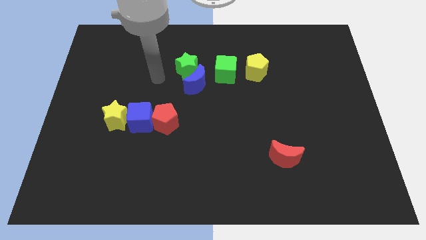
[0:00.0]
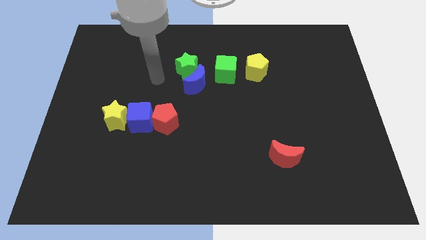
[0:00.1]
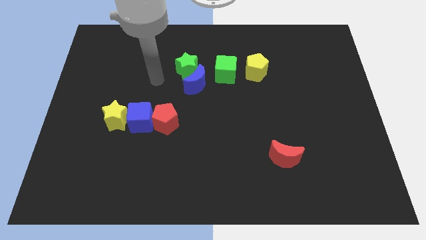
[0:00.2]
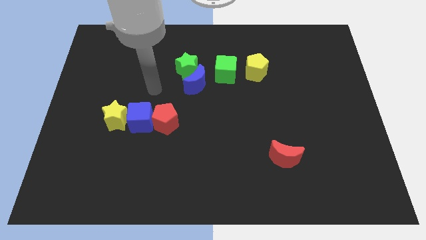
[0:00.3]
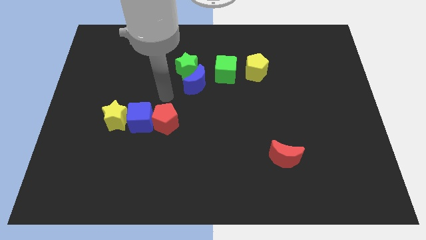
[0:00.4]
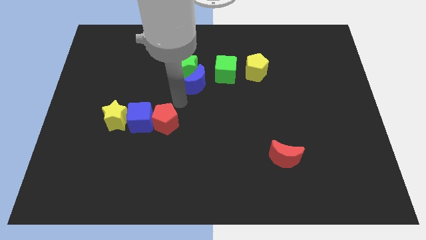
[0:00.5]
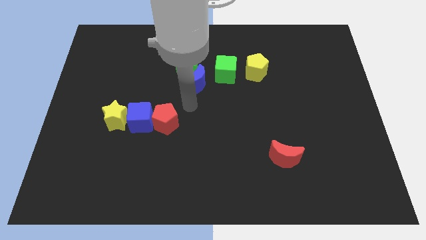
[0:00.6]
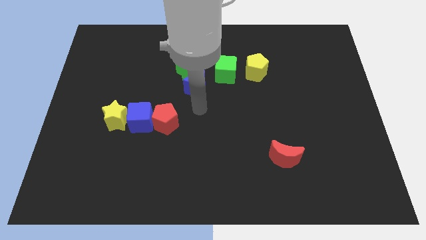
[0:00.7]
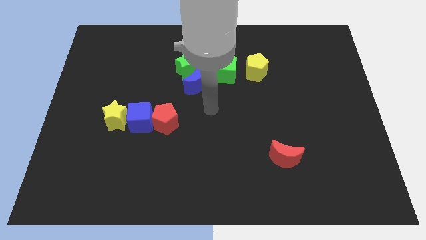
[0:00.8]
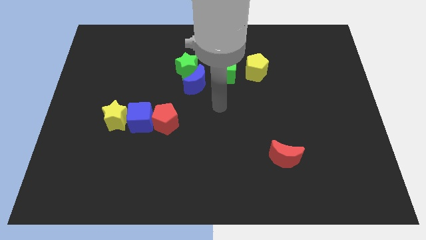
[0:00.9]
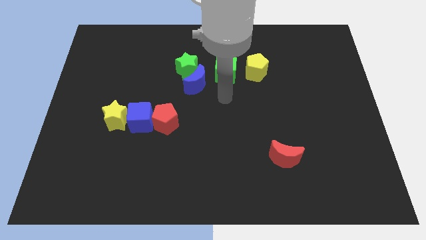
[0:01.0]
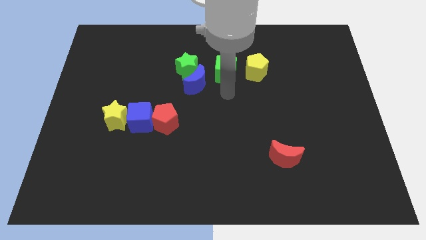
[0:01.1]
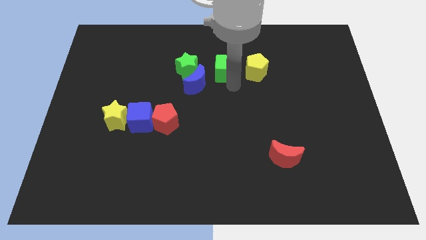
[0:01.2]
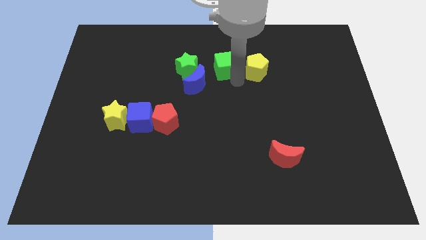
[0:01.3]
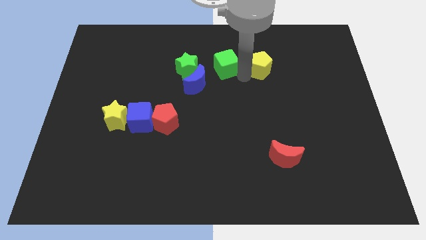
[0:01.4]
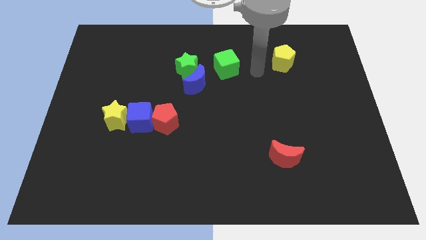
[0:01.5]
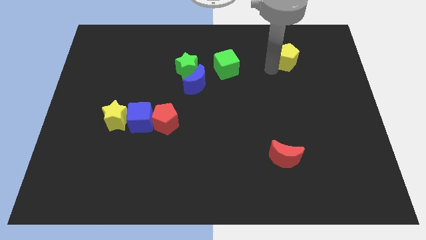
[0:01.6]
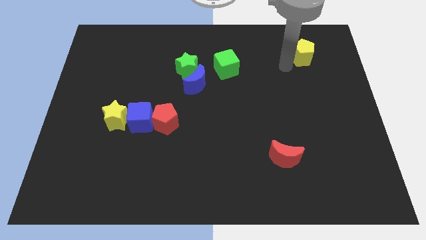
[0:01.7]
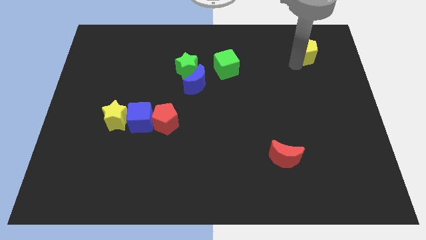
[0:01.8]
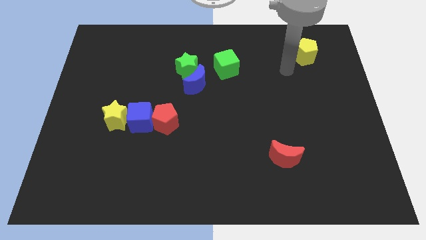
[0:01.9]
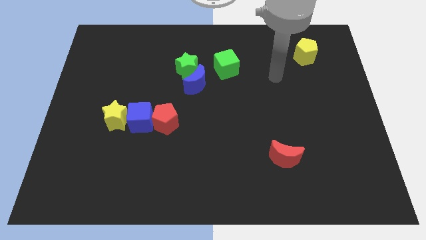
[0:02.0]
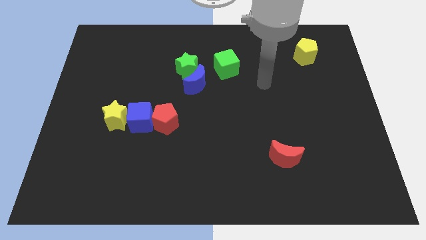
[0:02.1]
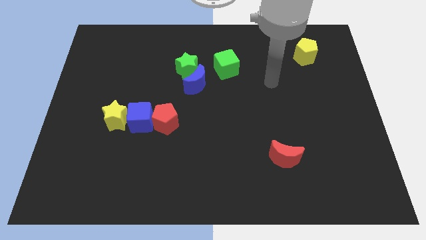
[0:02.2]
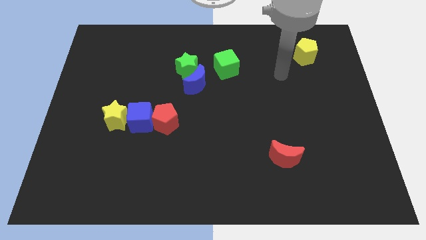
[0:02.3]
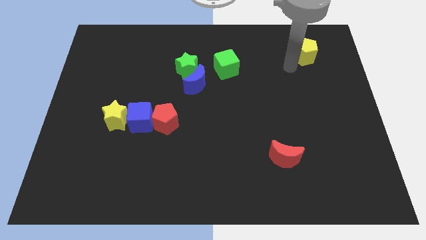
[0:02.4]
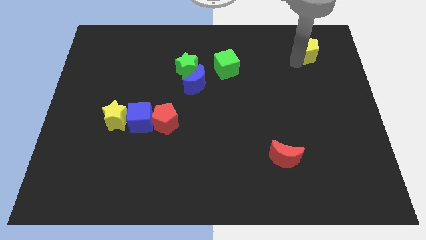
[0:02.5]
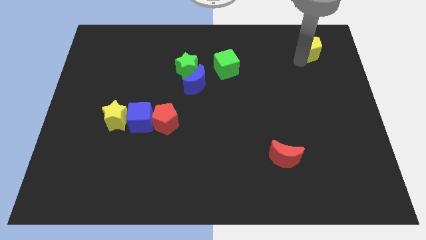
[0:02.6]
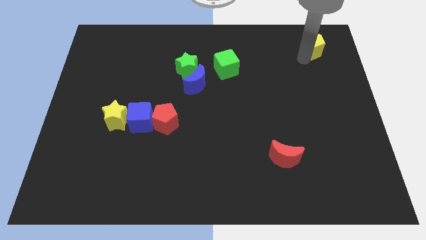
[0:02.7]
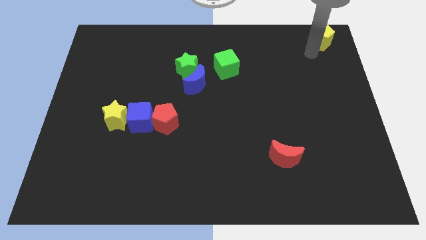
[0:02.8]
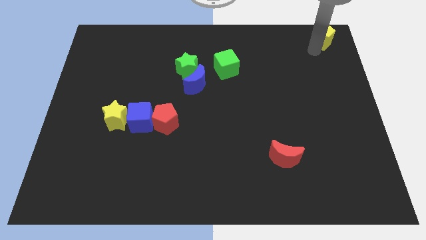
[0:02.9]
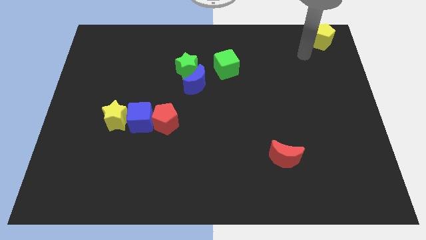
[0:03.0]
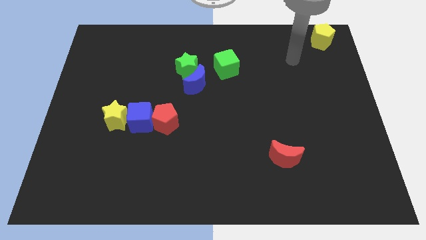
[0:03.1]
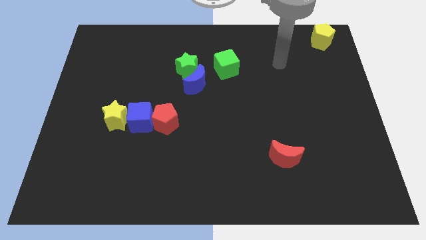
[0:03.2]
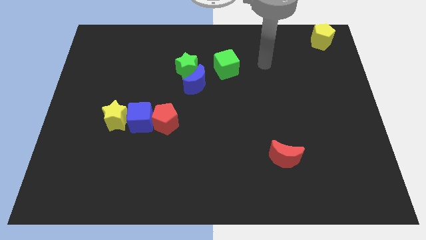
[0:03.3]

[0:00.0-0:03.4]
push the yellow pentagon

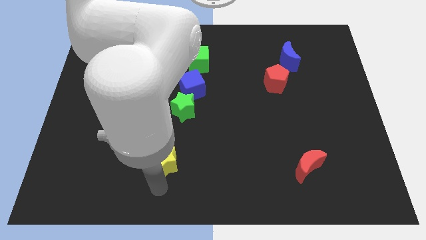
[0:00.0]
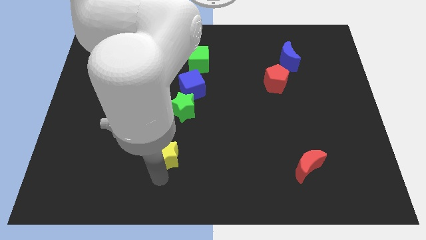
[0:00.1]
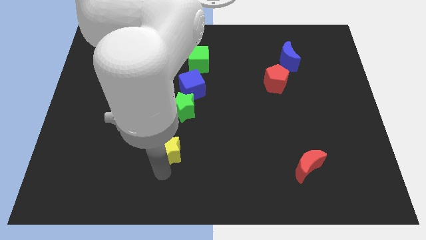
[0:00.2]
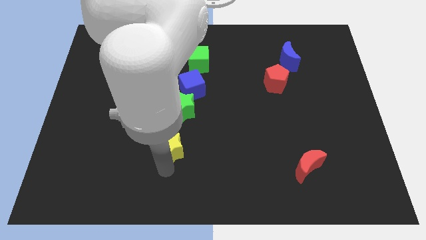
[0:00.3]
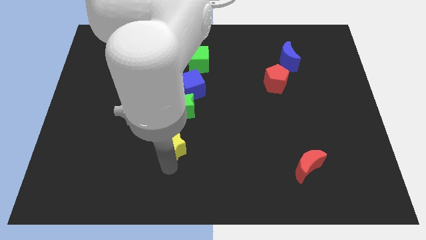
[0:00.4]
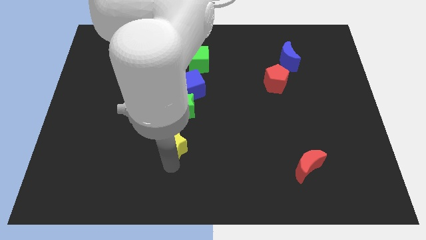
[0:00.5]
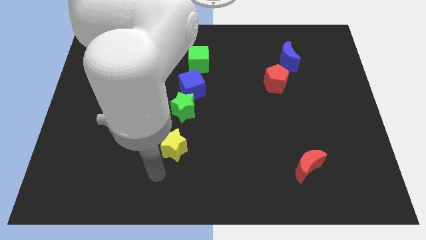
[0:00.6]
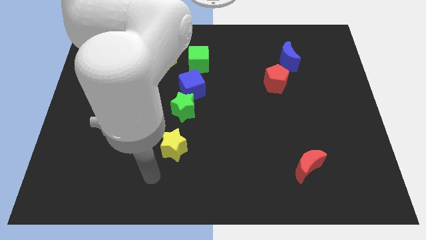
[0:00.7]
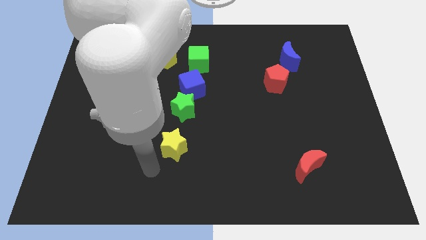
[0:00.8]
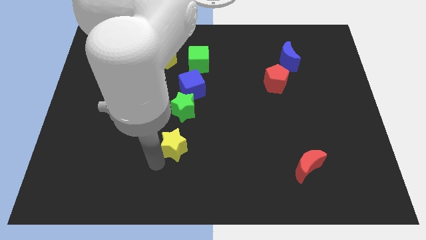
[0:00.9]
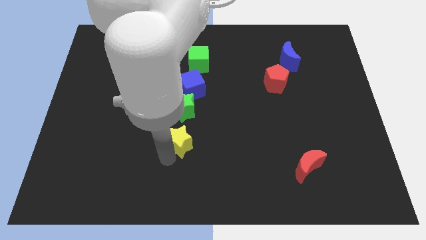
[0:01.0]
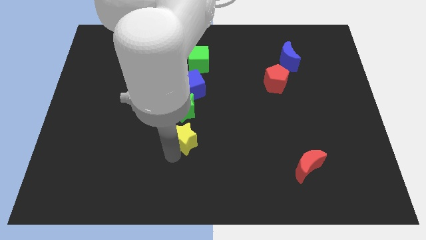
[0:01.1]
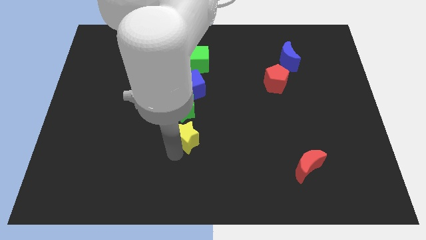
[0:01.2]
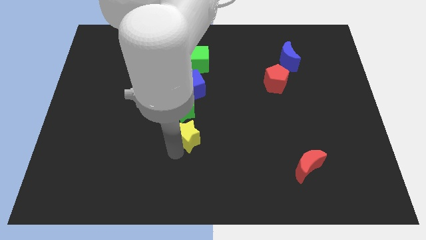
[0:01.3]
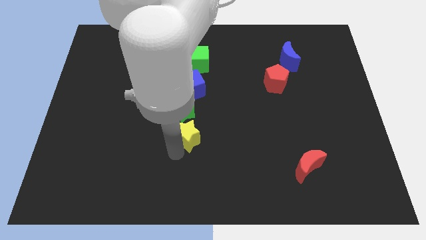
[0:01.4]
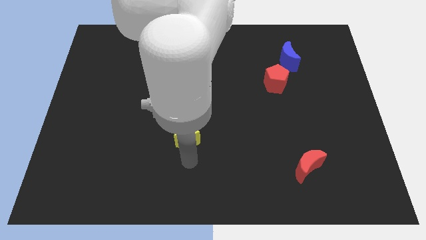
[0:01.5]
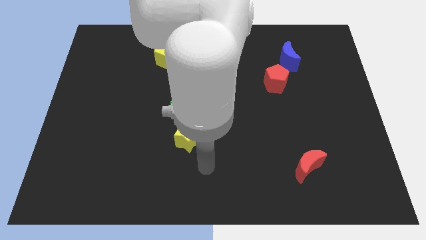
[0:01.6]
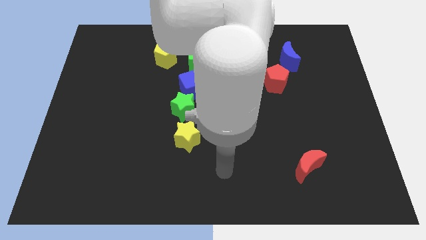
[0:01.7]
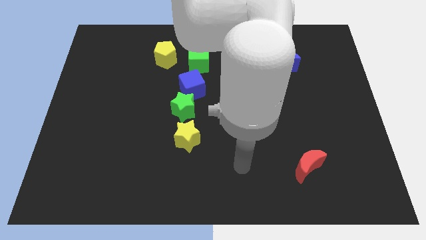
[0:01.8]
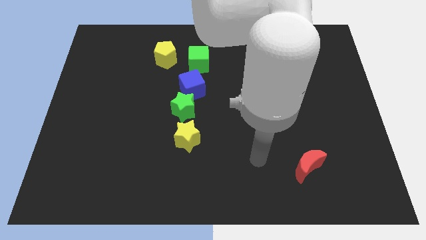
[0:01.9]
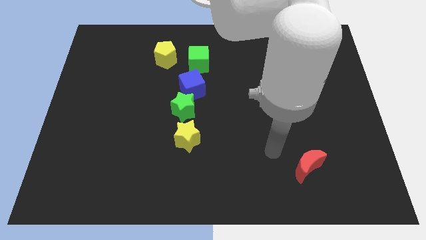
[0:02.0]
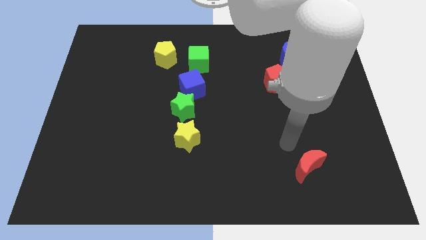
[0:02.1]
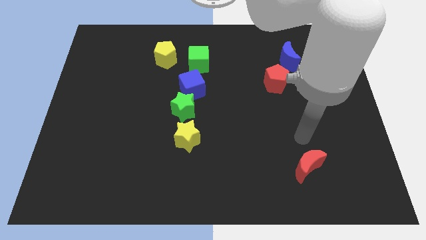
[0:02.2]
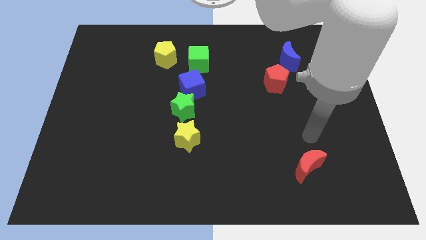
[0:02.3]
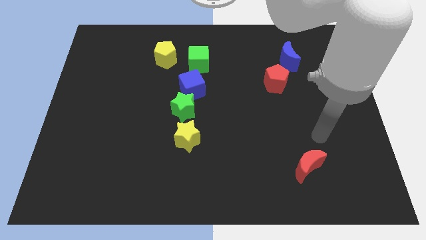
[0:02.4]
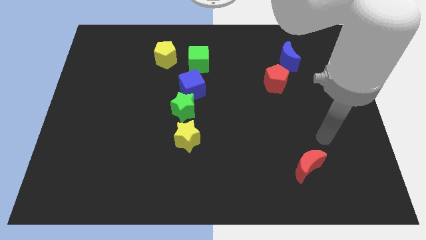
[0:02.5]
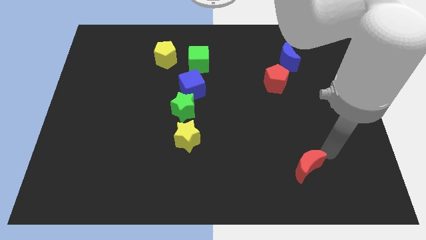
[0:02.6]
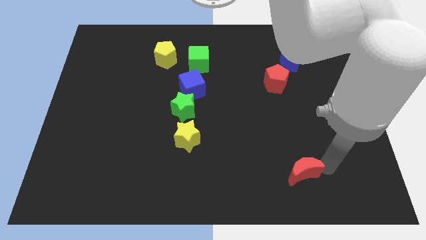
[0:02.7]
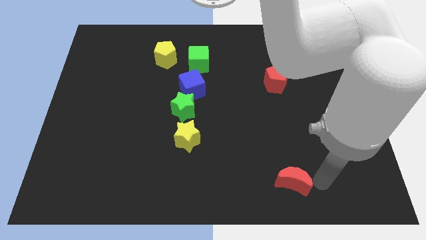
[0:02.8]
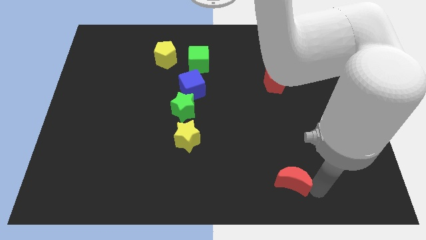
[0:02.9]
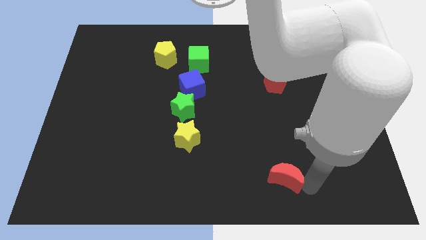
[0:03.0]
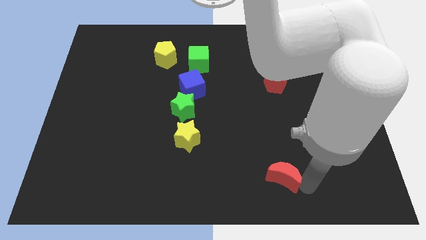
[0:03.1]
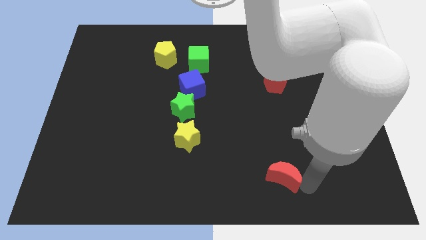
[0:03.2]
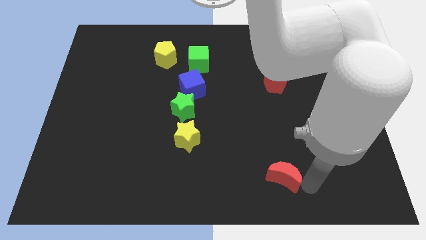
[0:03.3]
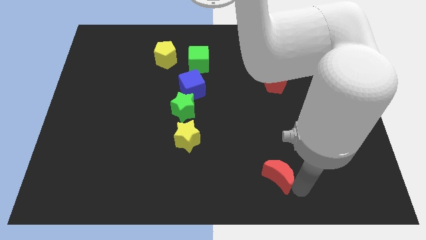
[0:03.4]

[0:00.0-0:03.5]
move the red moon below the red pentagon

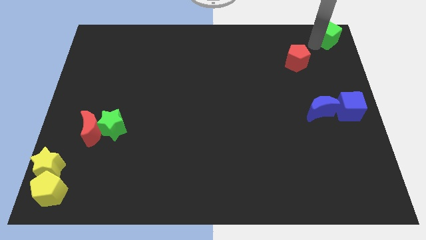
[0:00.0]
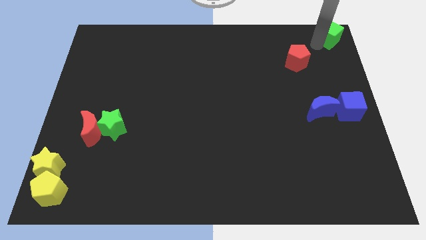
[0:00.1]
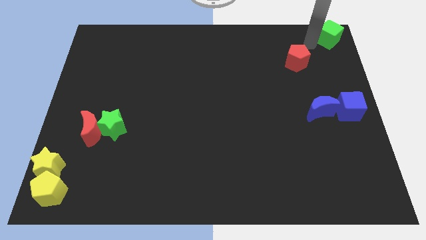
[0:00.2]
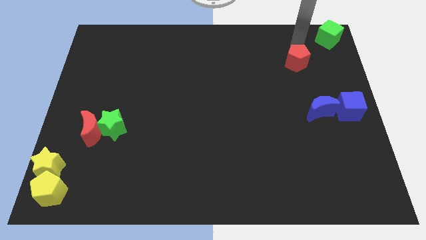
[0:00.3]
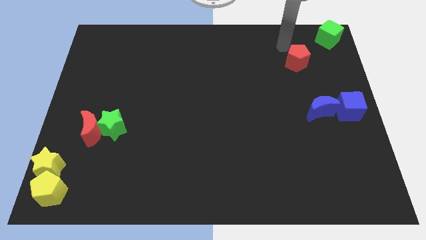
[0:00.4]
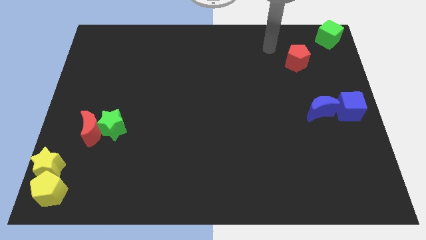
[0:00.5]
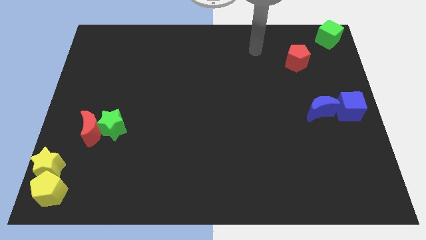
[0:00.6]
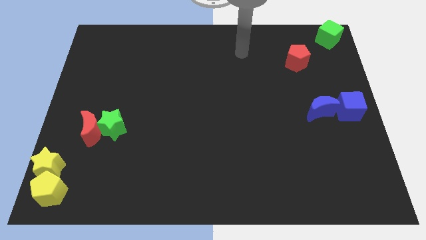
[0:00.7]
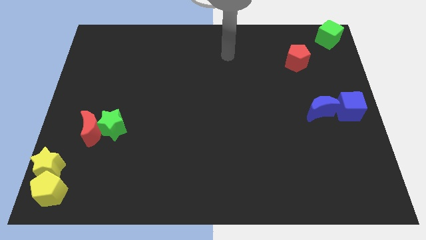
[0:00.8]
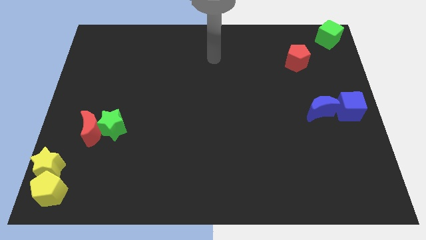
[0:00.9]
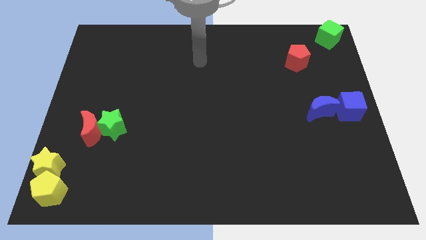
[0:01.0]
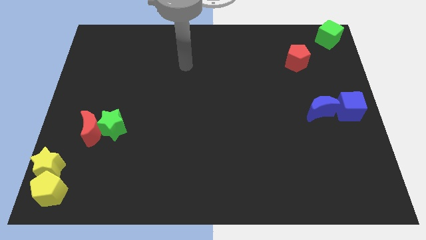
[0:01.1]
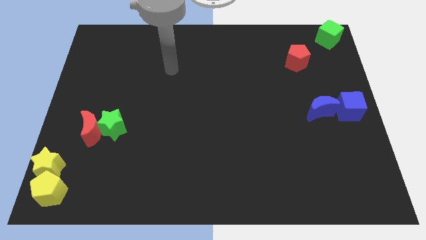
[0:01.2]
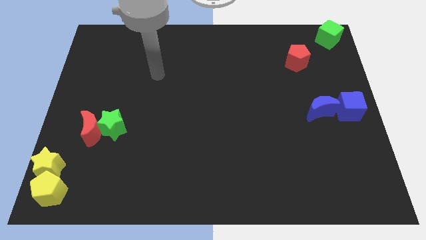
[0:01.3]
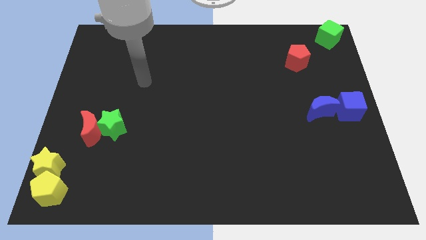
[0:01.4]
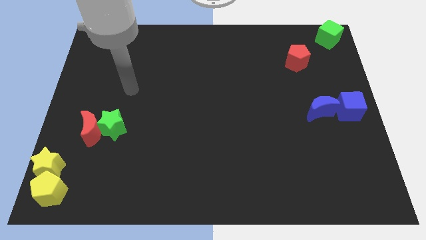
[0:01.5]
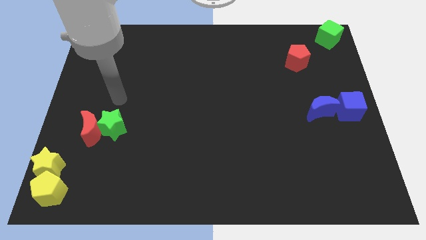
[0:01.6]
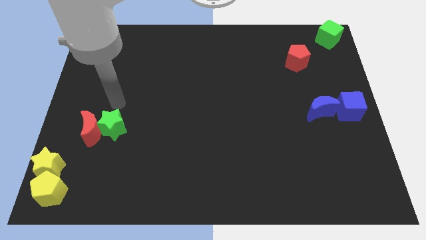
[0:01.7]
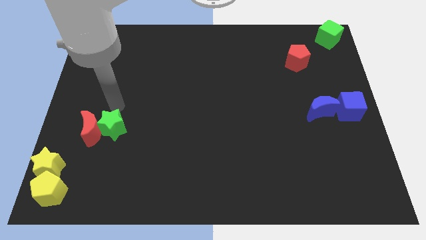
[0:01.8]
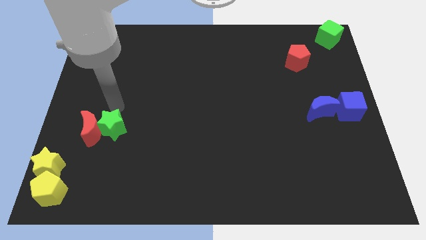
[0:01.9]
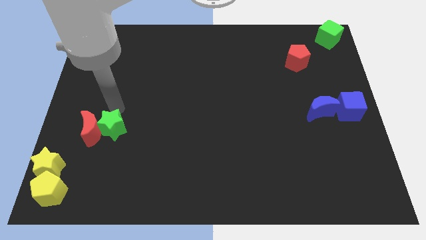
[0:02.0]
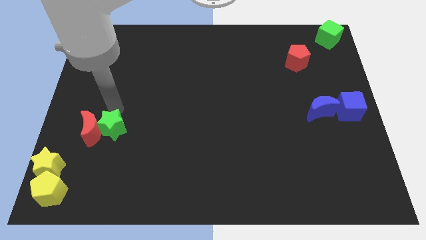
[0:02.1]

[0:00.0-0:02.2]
move your arm to the top of green star
